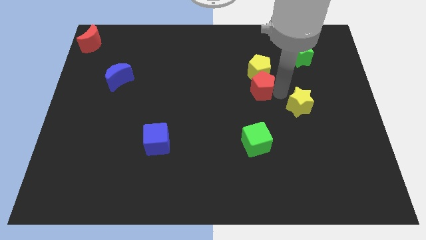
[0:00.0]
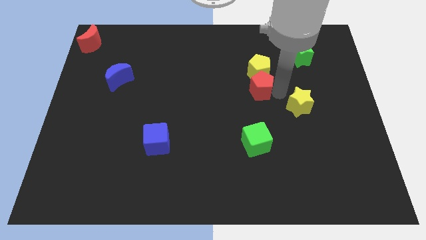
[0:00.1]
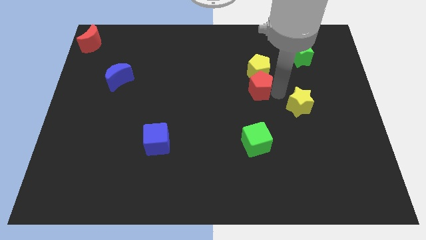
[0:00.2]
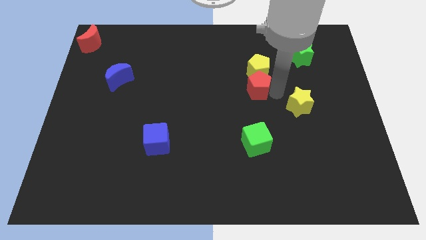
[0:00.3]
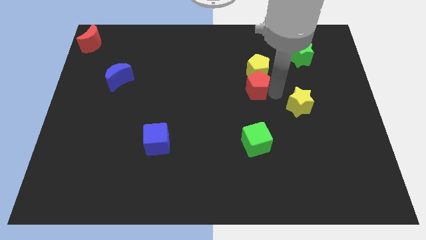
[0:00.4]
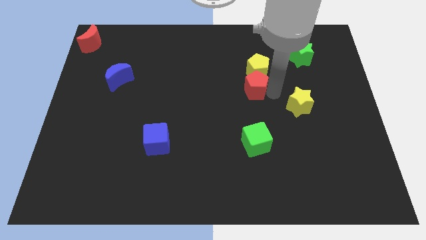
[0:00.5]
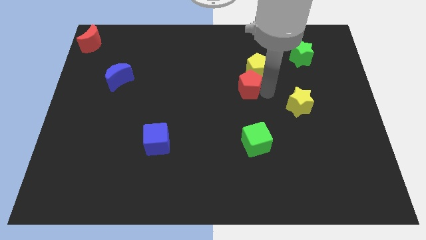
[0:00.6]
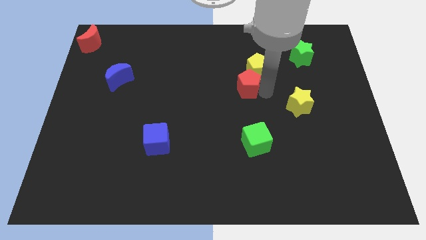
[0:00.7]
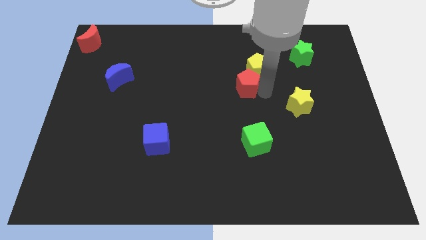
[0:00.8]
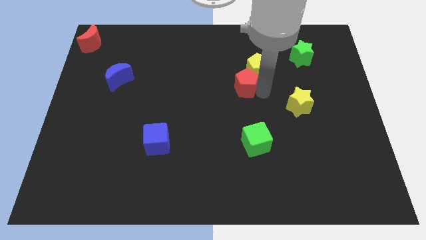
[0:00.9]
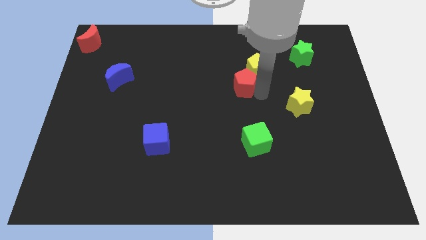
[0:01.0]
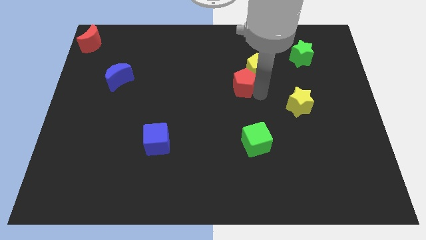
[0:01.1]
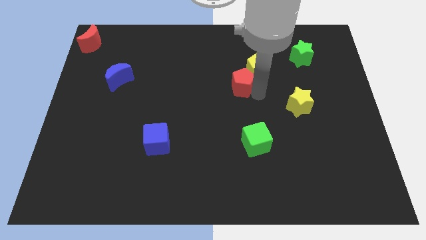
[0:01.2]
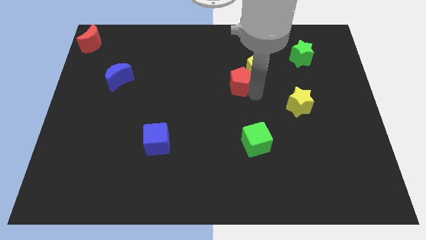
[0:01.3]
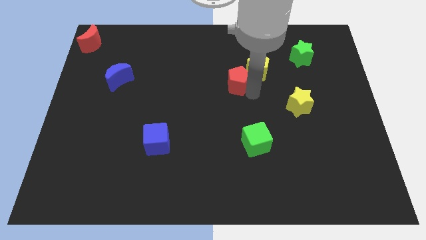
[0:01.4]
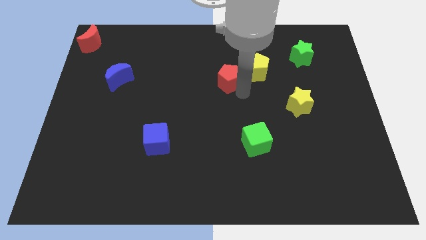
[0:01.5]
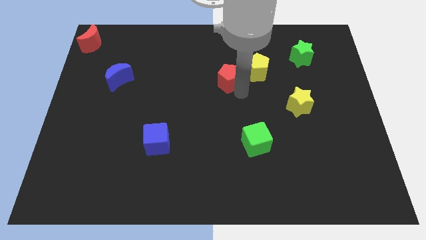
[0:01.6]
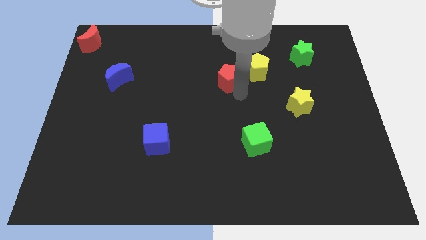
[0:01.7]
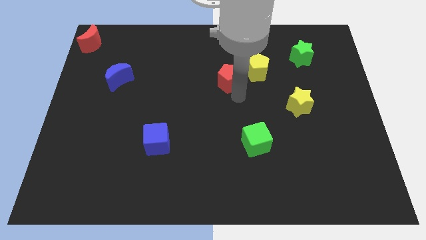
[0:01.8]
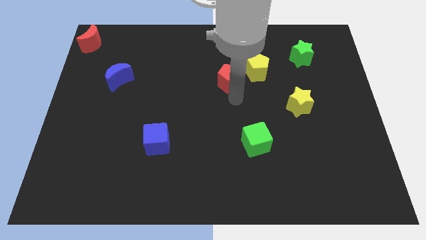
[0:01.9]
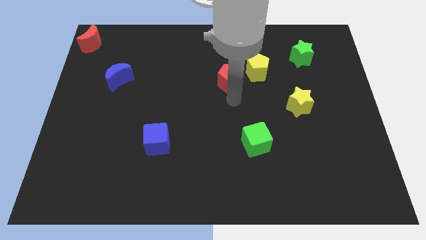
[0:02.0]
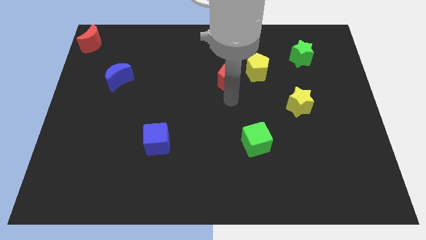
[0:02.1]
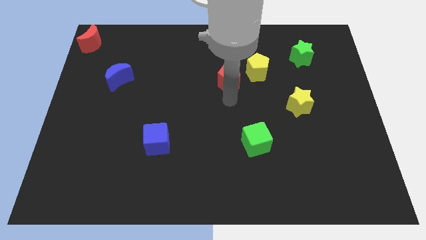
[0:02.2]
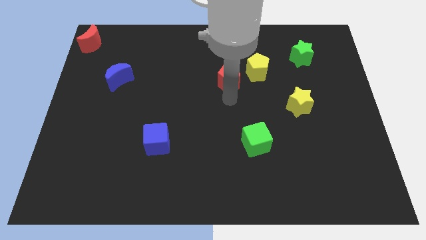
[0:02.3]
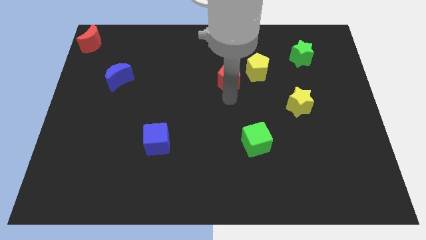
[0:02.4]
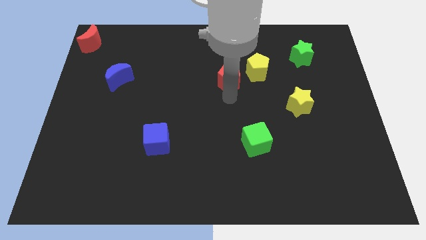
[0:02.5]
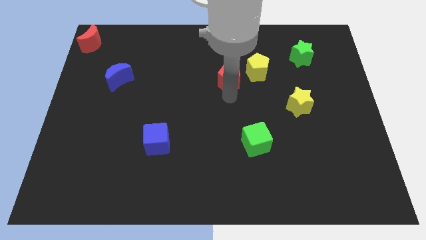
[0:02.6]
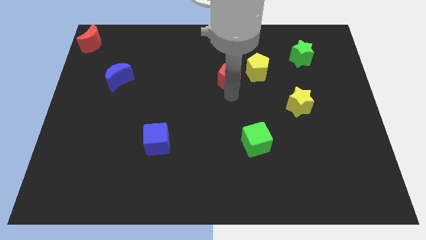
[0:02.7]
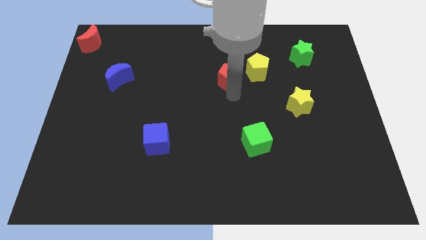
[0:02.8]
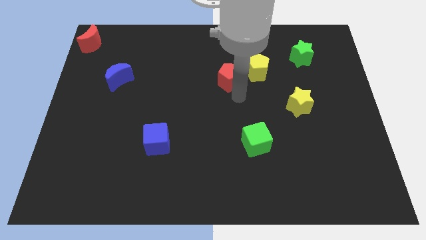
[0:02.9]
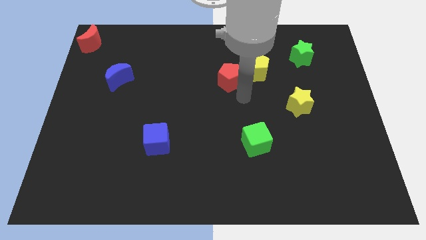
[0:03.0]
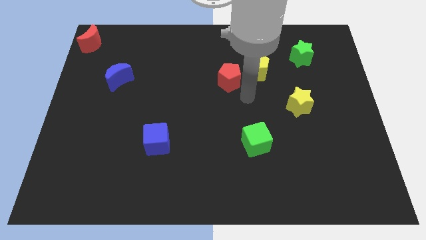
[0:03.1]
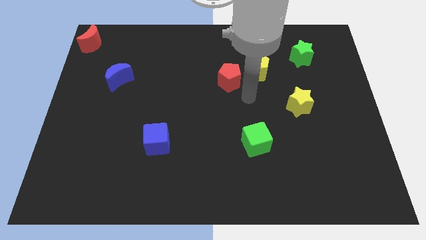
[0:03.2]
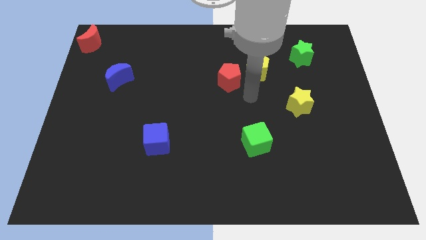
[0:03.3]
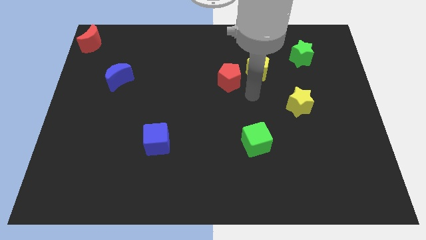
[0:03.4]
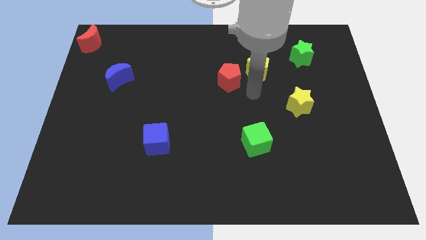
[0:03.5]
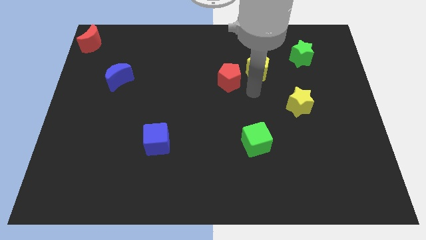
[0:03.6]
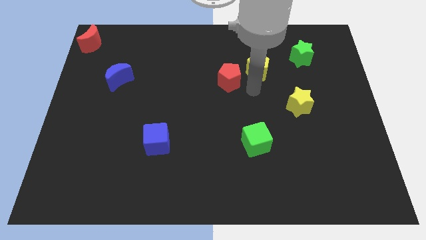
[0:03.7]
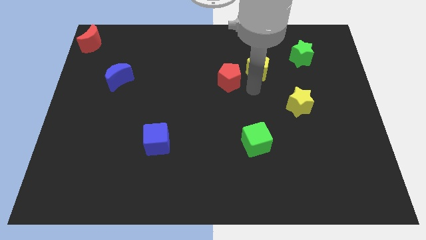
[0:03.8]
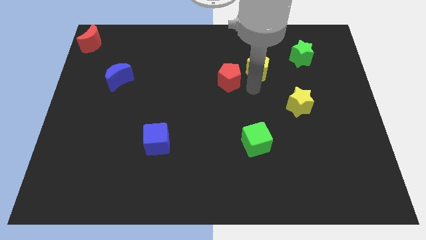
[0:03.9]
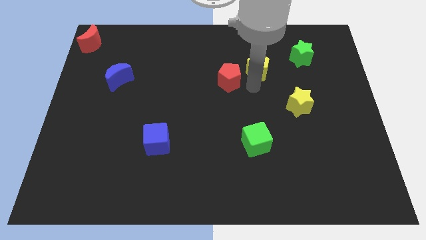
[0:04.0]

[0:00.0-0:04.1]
place the red pentagon diagonal to the blue cube

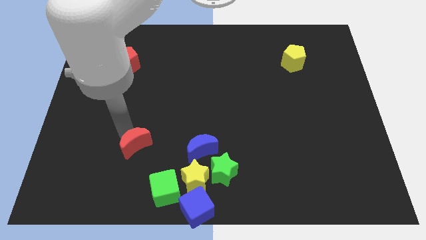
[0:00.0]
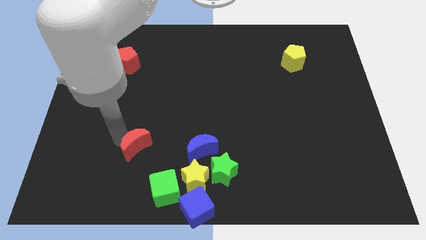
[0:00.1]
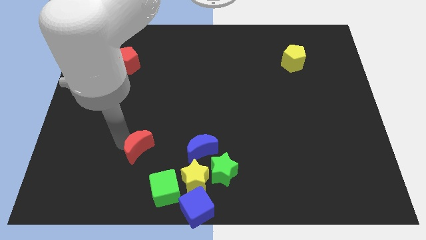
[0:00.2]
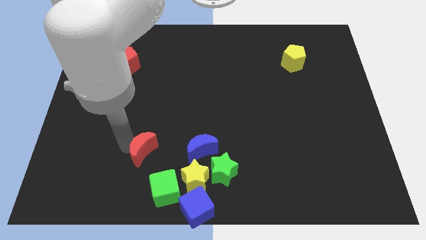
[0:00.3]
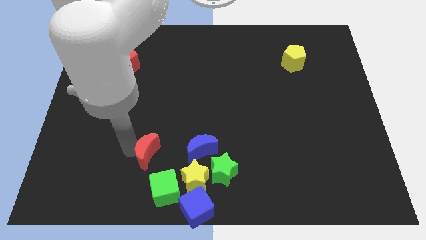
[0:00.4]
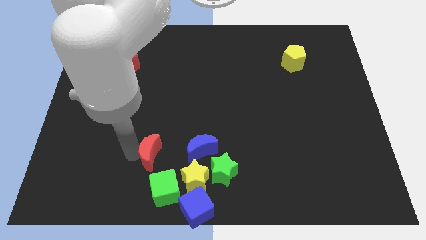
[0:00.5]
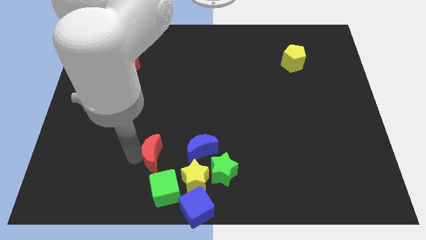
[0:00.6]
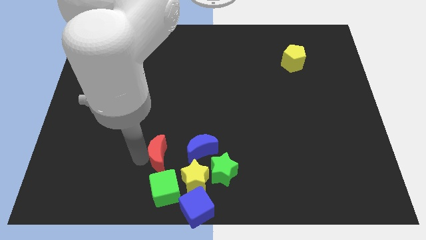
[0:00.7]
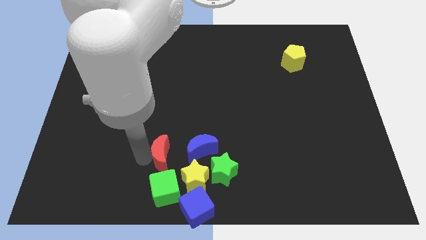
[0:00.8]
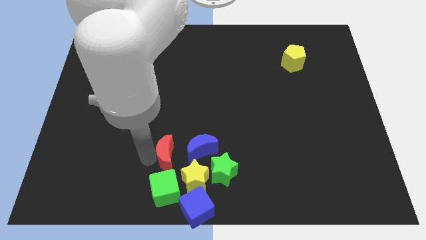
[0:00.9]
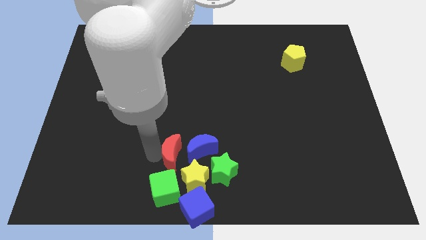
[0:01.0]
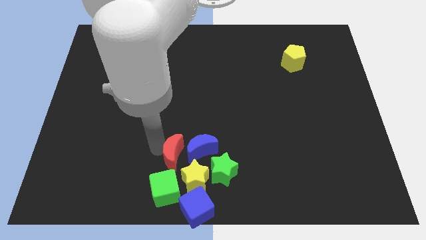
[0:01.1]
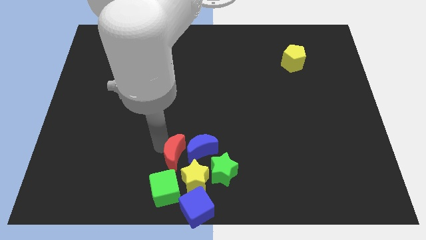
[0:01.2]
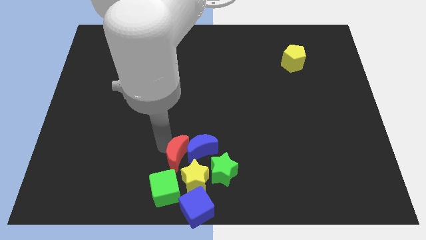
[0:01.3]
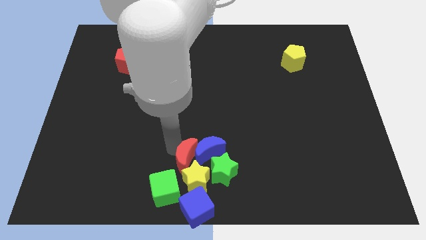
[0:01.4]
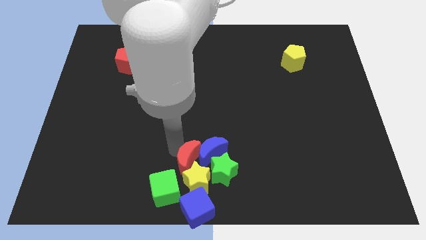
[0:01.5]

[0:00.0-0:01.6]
move the red moon into the blue moon

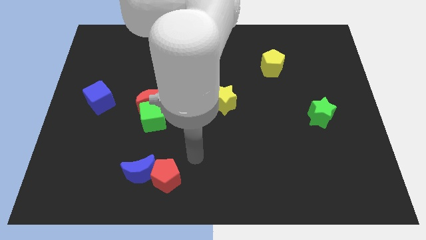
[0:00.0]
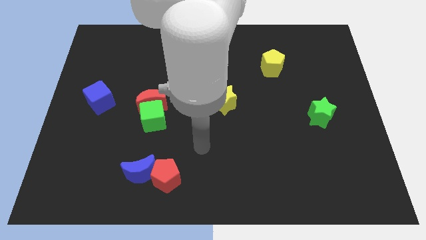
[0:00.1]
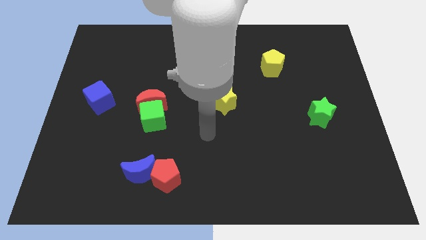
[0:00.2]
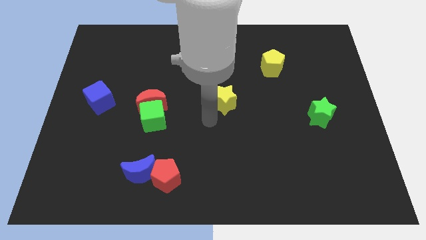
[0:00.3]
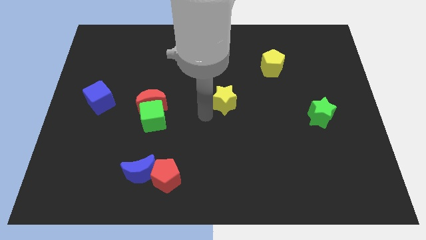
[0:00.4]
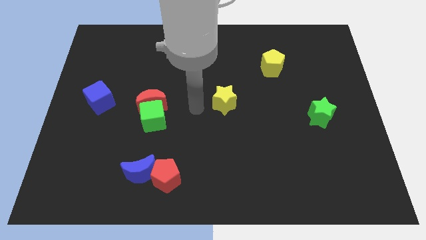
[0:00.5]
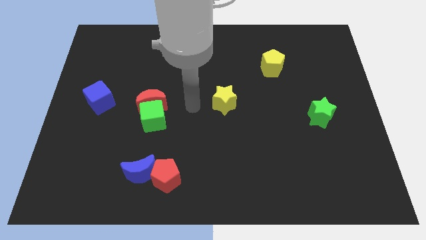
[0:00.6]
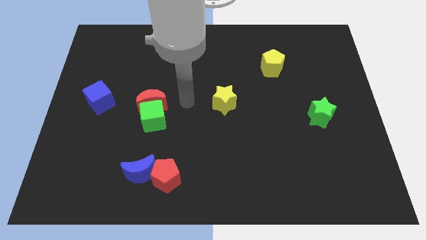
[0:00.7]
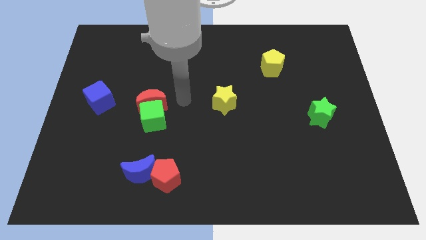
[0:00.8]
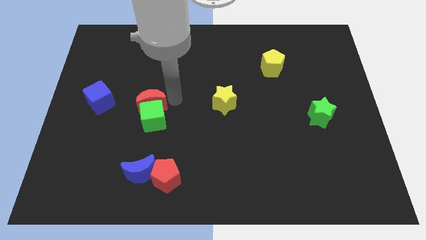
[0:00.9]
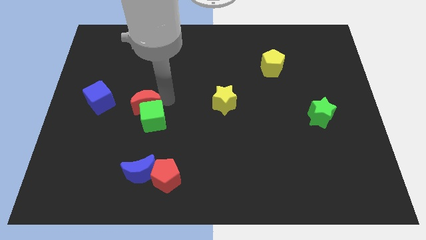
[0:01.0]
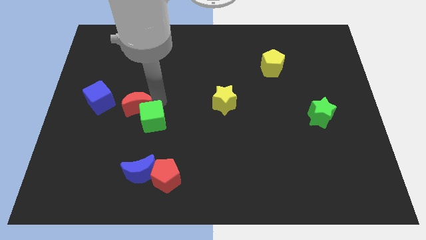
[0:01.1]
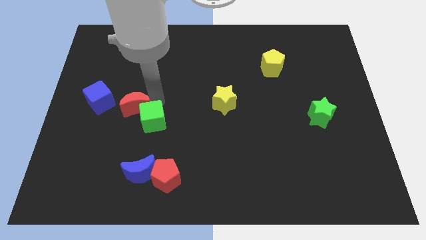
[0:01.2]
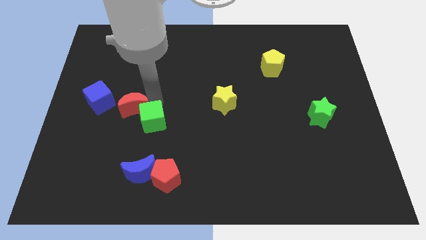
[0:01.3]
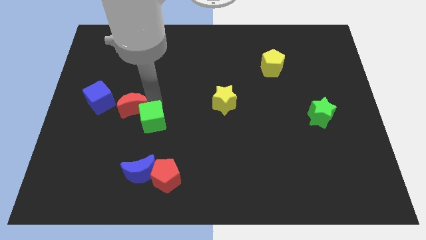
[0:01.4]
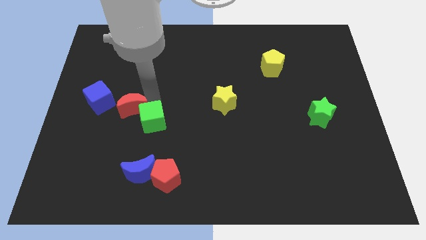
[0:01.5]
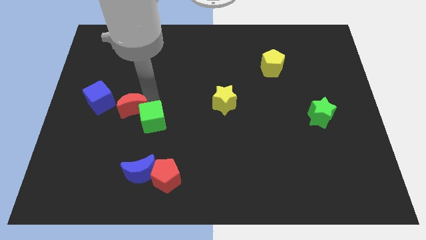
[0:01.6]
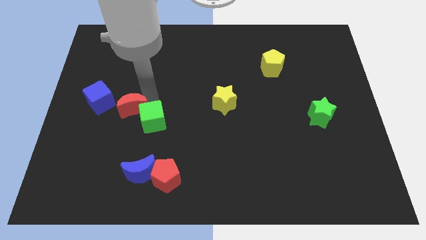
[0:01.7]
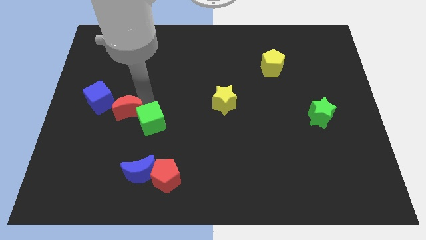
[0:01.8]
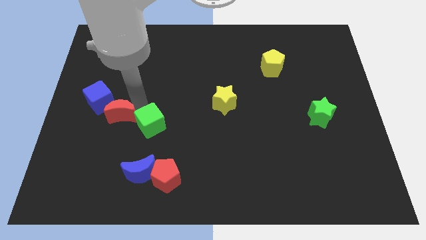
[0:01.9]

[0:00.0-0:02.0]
slide the red crescent in between blue cube and green cube

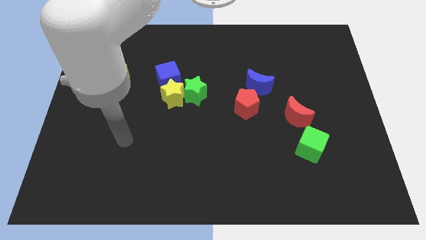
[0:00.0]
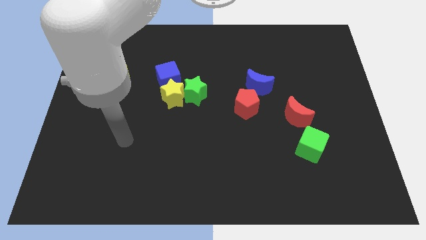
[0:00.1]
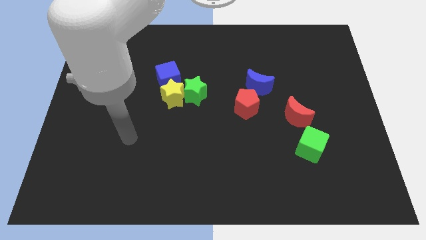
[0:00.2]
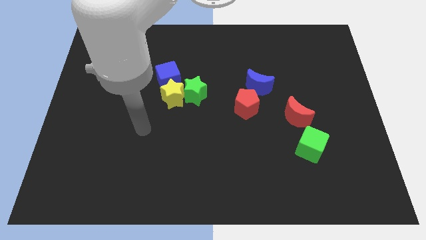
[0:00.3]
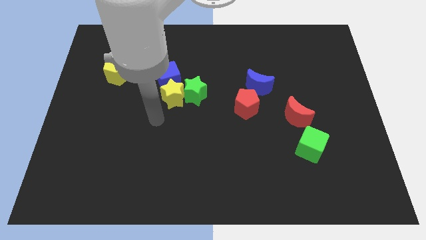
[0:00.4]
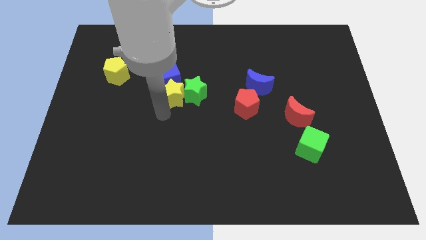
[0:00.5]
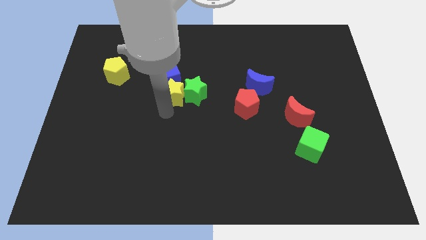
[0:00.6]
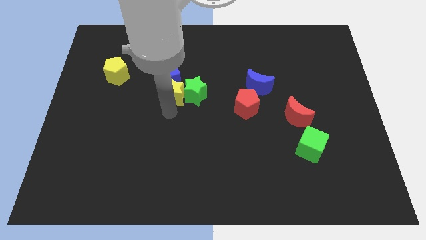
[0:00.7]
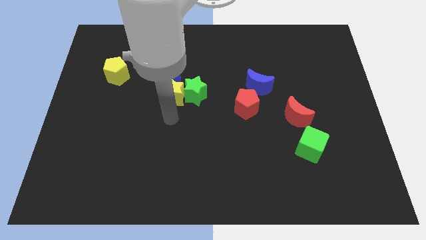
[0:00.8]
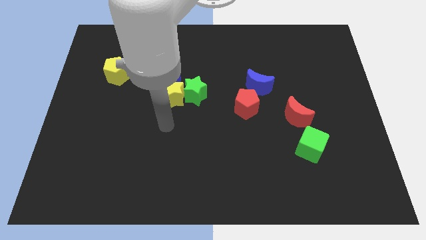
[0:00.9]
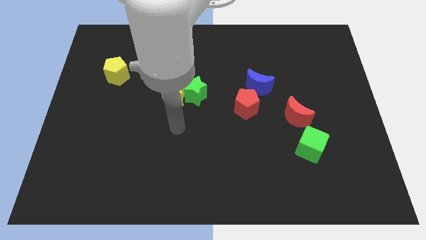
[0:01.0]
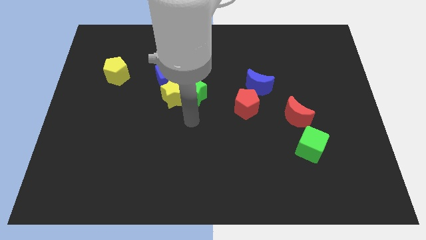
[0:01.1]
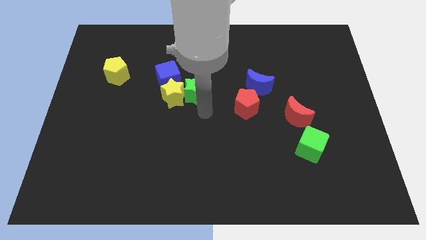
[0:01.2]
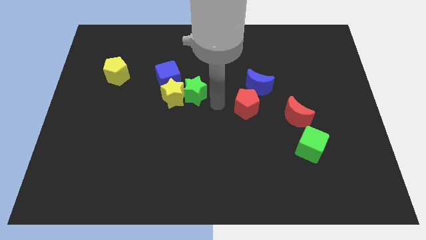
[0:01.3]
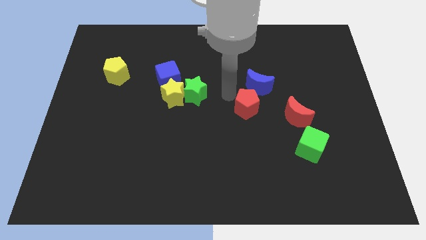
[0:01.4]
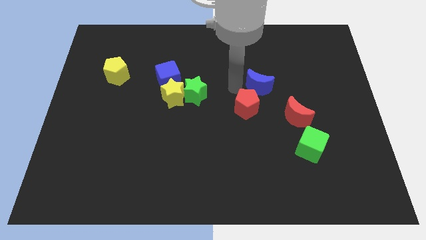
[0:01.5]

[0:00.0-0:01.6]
slightly push the yellow star on the board
